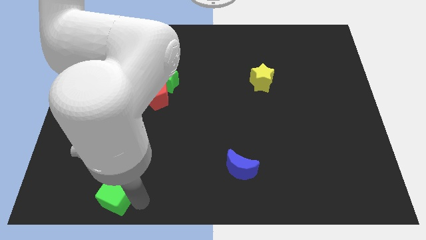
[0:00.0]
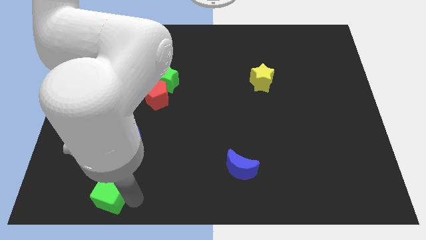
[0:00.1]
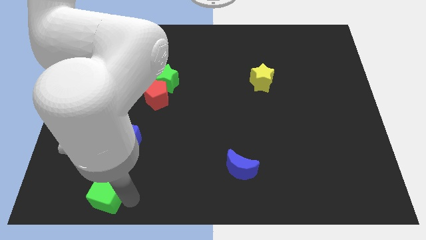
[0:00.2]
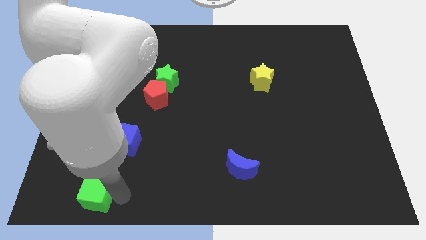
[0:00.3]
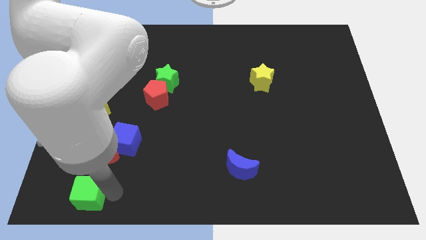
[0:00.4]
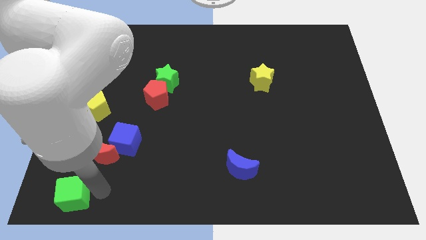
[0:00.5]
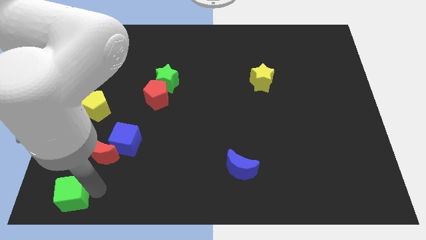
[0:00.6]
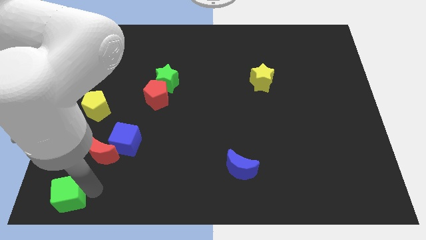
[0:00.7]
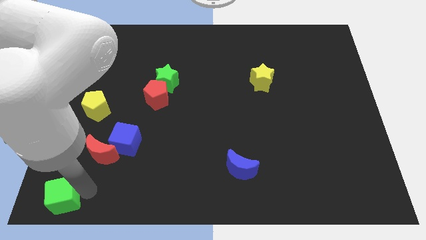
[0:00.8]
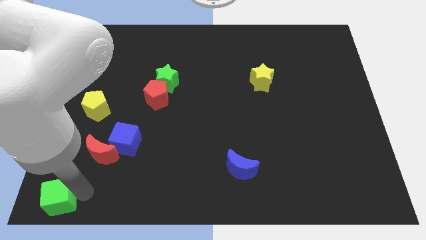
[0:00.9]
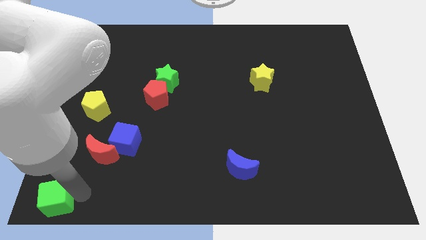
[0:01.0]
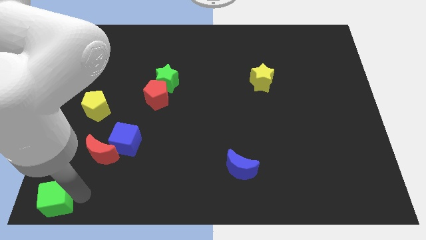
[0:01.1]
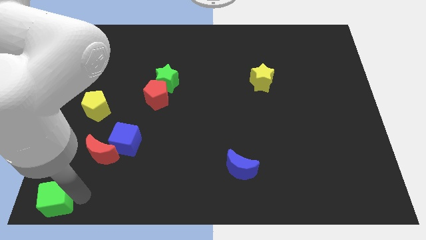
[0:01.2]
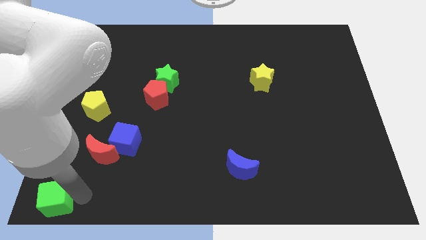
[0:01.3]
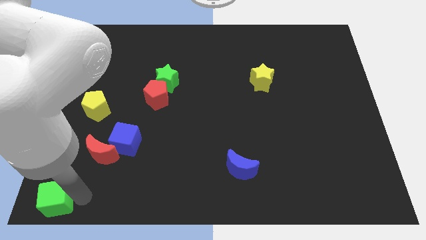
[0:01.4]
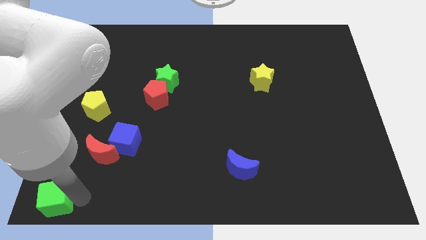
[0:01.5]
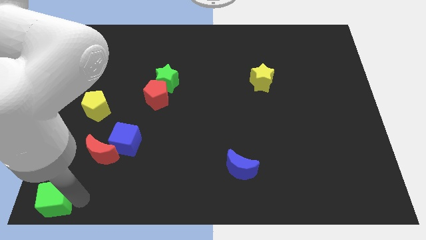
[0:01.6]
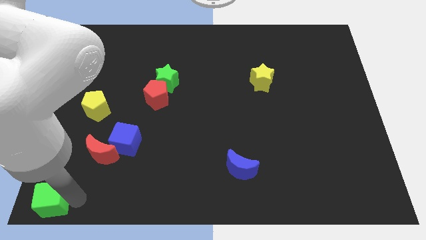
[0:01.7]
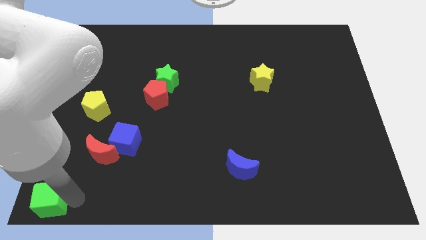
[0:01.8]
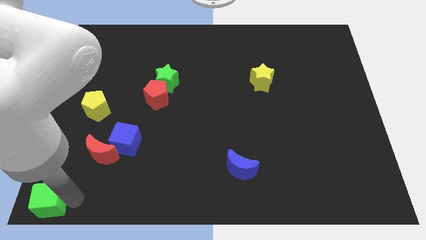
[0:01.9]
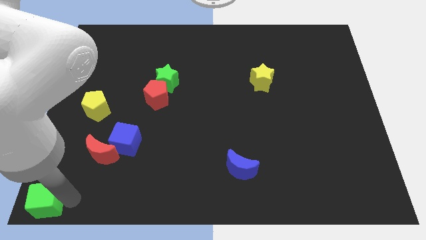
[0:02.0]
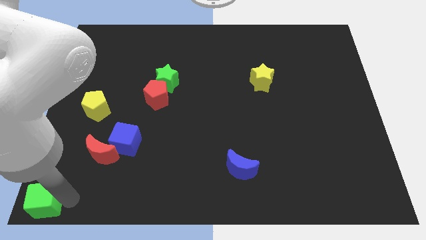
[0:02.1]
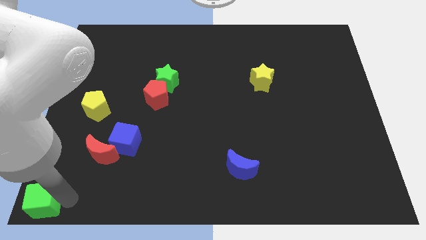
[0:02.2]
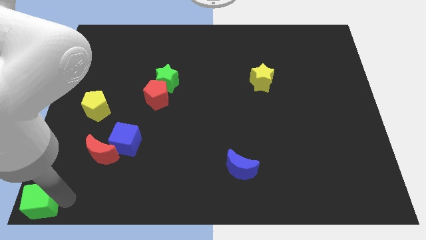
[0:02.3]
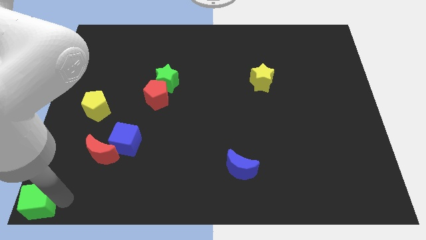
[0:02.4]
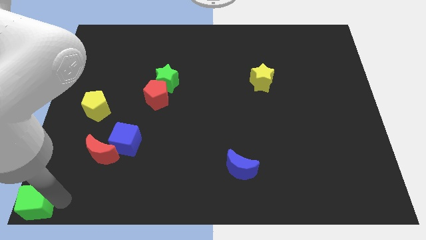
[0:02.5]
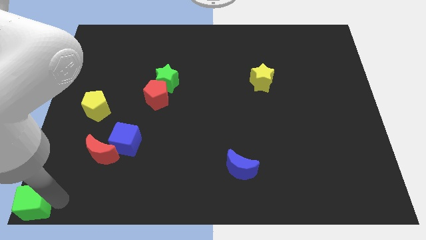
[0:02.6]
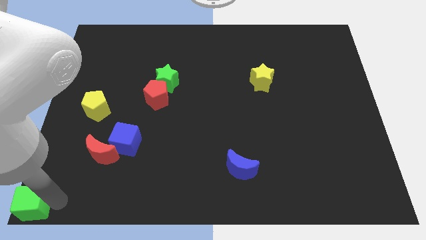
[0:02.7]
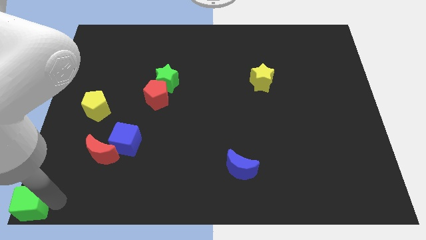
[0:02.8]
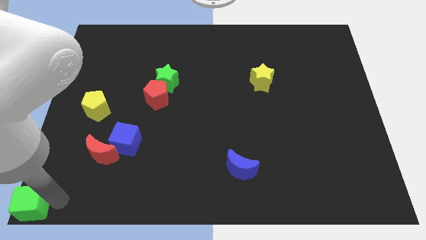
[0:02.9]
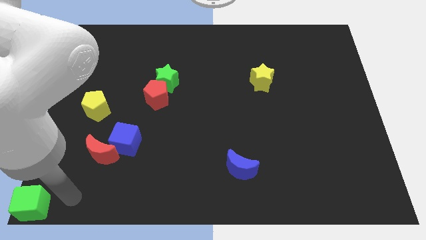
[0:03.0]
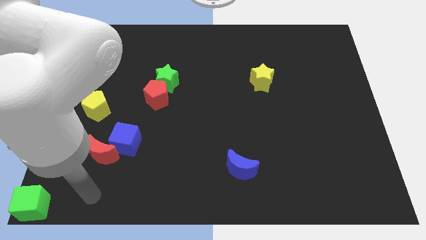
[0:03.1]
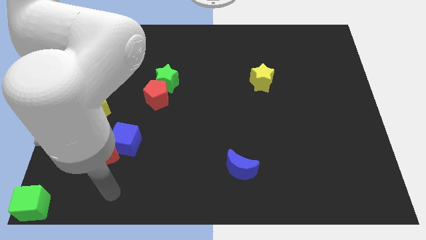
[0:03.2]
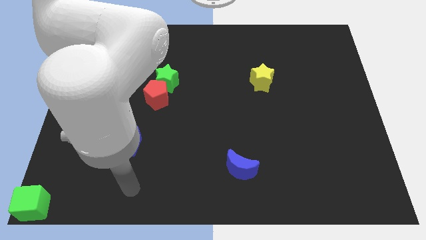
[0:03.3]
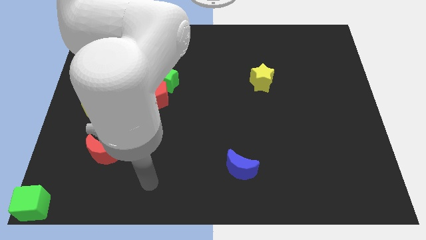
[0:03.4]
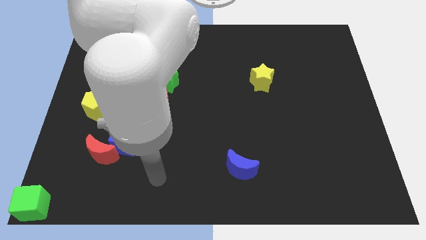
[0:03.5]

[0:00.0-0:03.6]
push the green cube to the bottom left

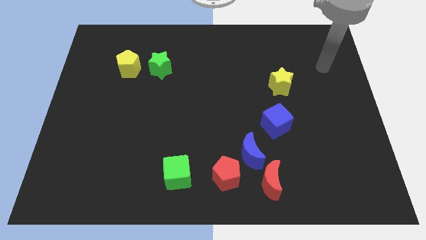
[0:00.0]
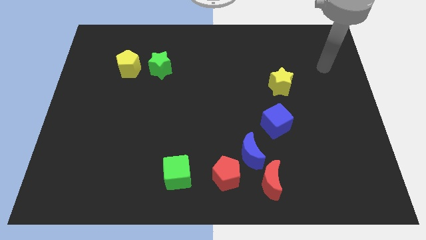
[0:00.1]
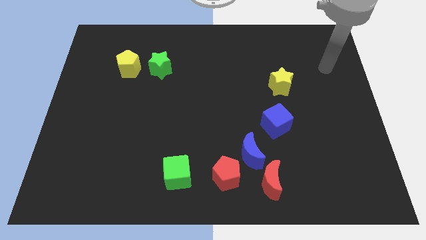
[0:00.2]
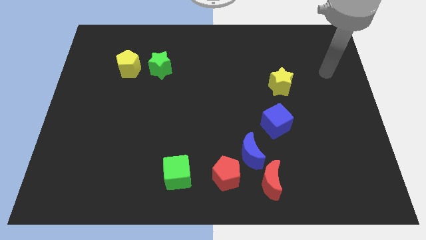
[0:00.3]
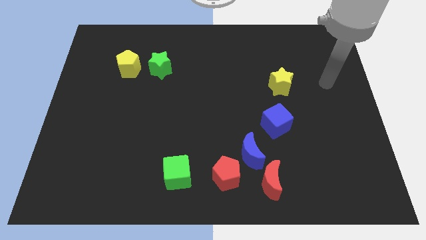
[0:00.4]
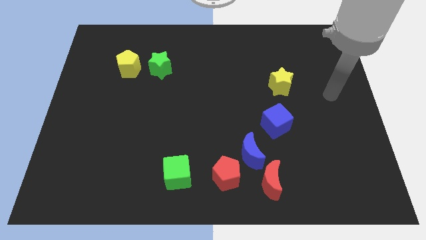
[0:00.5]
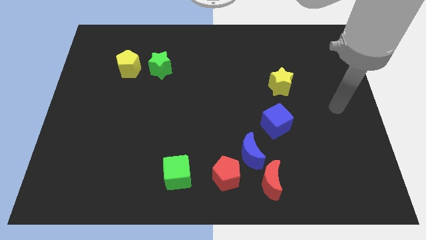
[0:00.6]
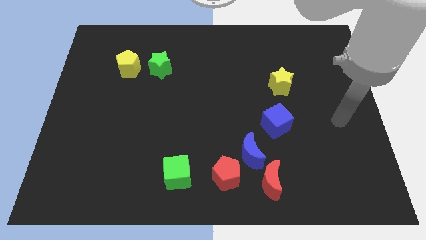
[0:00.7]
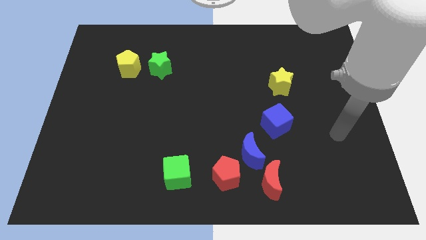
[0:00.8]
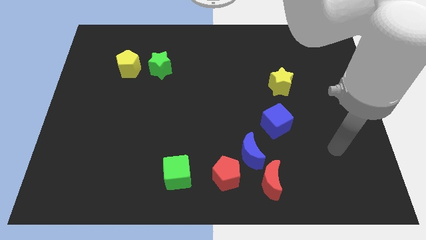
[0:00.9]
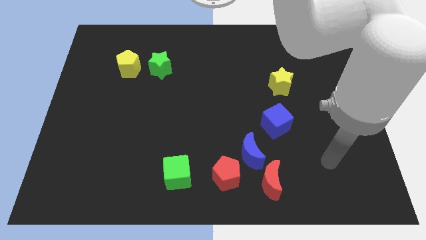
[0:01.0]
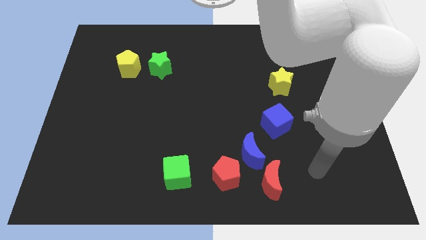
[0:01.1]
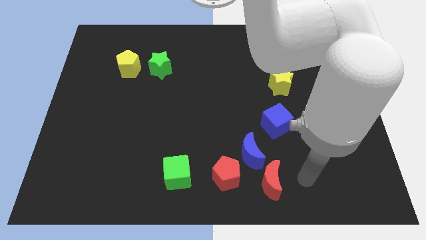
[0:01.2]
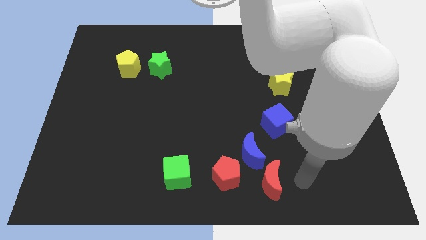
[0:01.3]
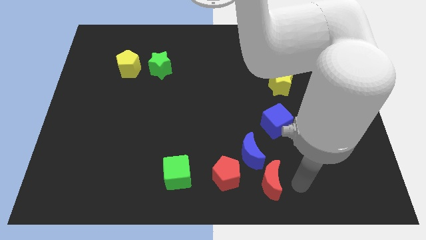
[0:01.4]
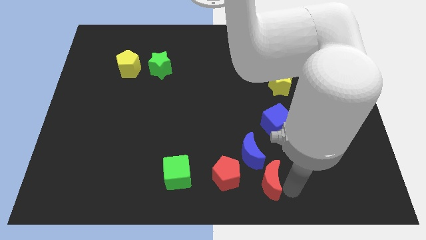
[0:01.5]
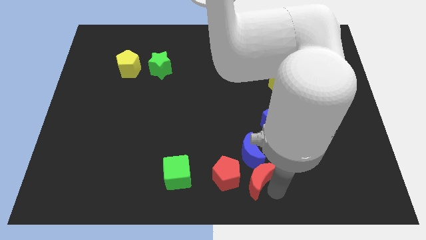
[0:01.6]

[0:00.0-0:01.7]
move the red crescent into the red penatgon

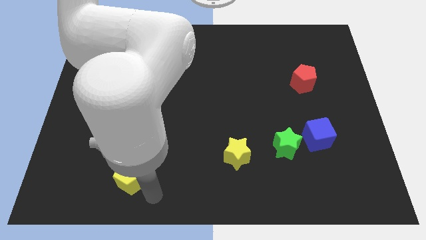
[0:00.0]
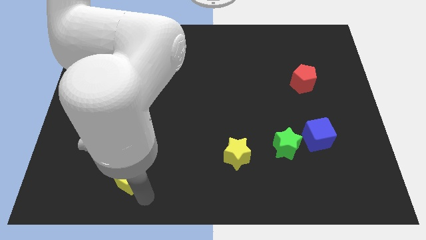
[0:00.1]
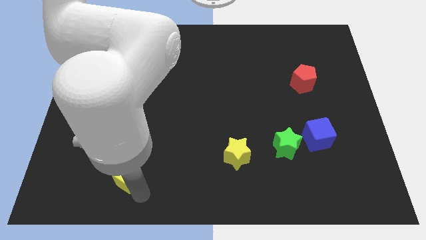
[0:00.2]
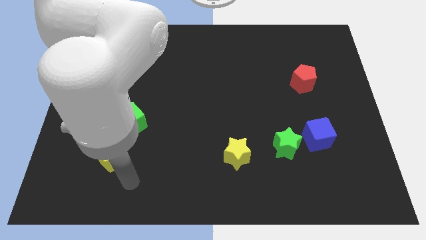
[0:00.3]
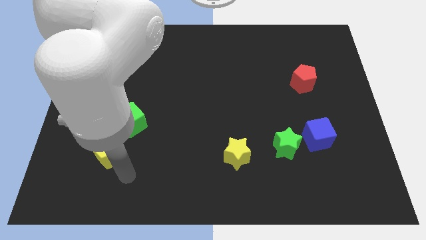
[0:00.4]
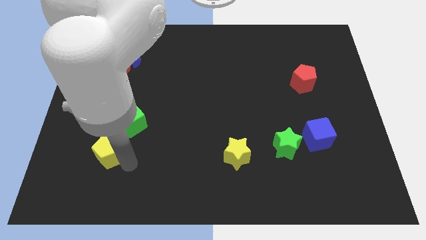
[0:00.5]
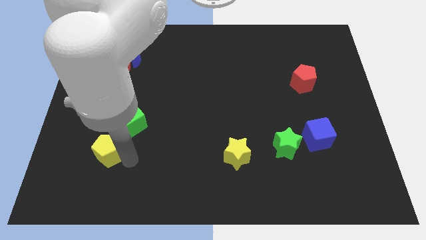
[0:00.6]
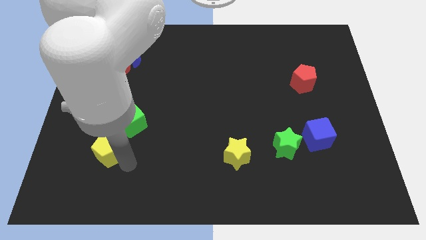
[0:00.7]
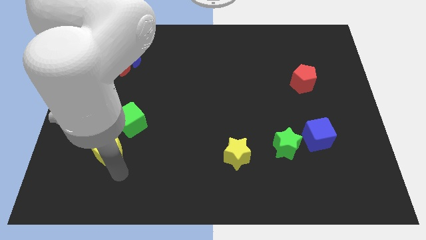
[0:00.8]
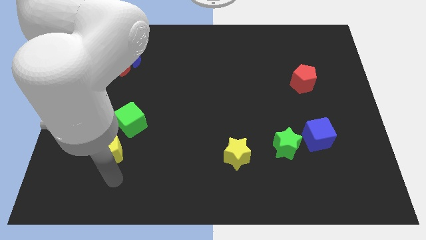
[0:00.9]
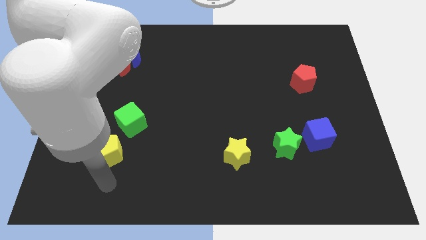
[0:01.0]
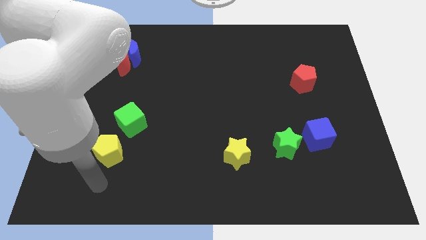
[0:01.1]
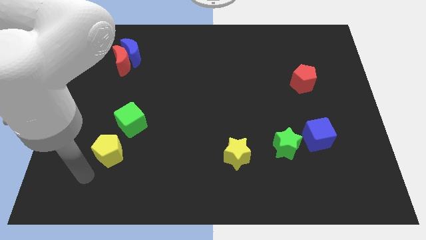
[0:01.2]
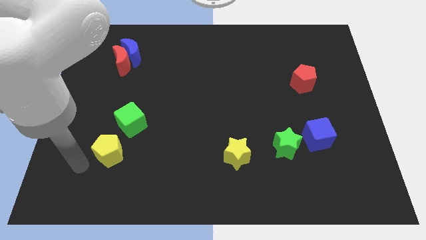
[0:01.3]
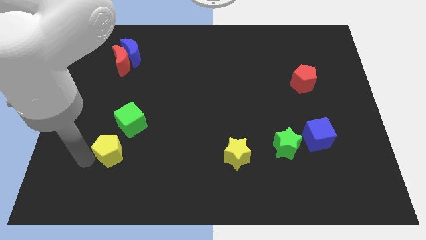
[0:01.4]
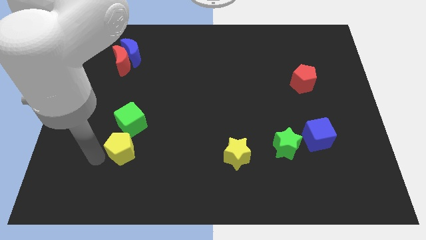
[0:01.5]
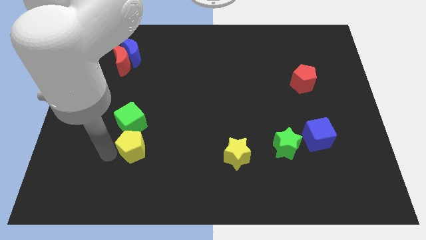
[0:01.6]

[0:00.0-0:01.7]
put the yellow pentagon to the bottom side of the green cube

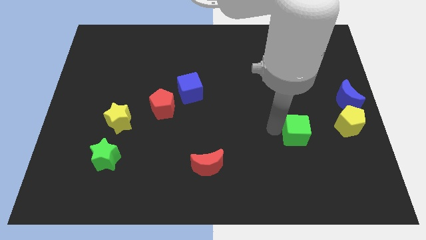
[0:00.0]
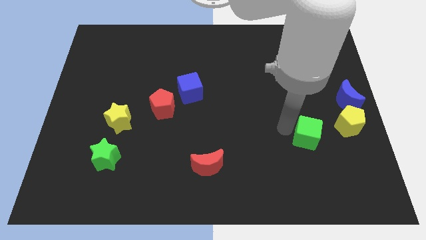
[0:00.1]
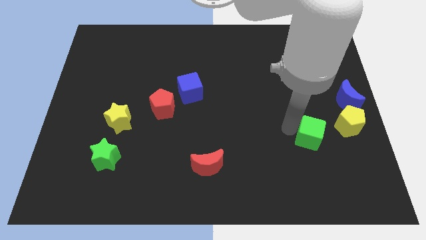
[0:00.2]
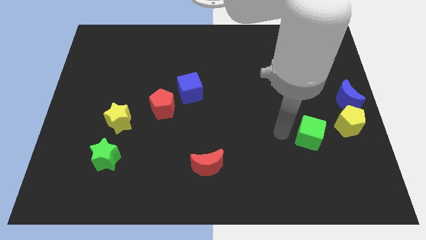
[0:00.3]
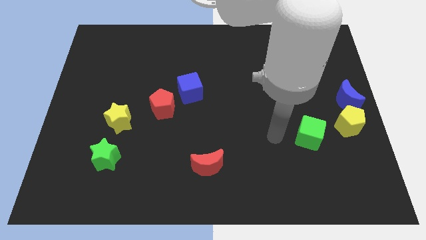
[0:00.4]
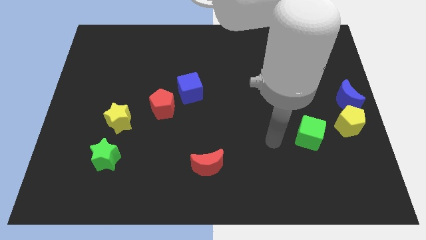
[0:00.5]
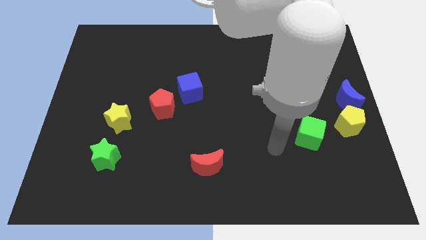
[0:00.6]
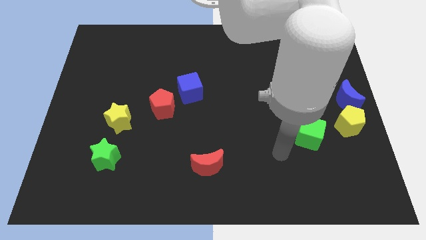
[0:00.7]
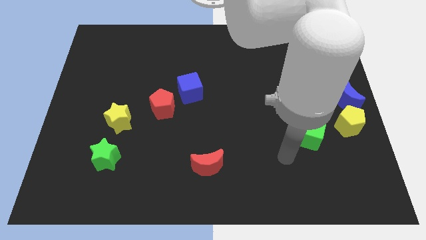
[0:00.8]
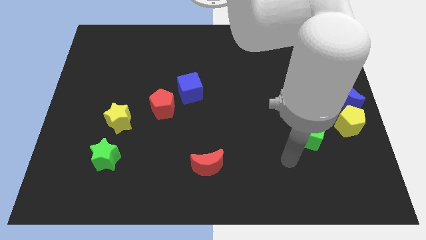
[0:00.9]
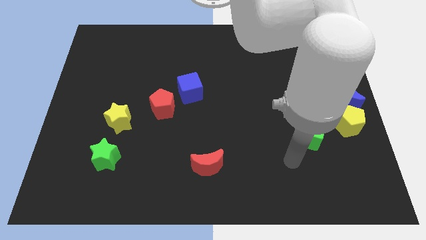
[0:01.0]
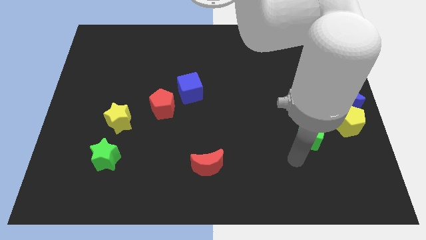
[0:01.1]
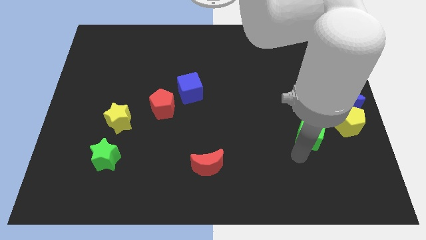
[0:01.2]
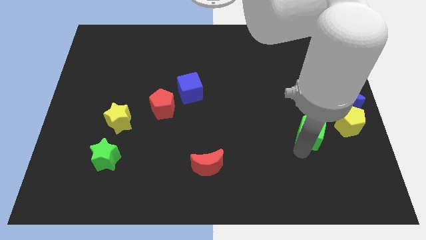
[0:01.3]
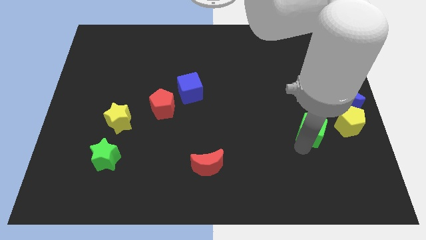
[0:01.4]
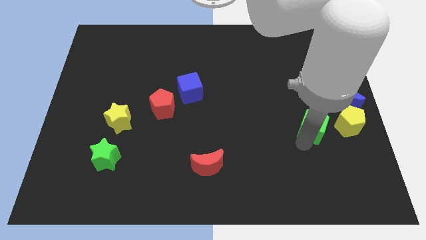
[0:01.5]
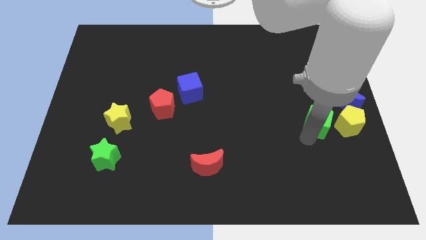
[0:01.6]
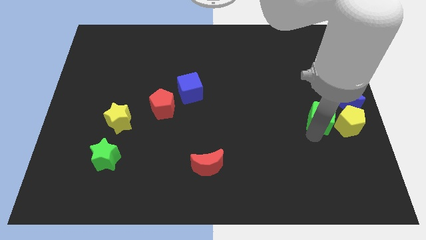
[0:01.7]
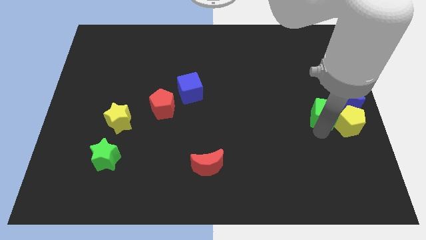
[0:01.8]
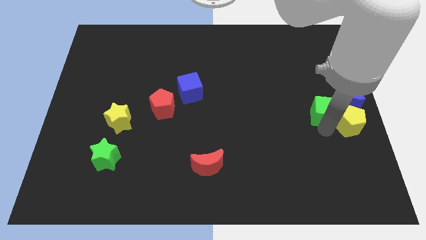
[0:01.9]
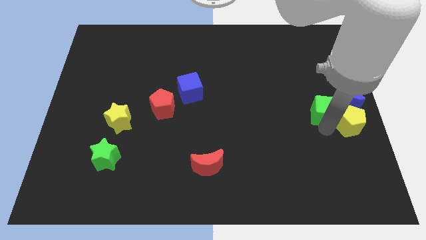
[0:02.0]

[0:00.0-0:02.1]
push the green cube towards the blue crescent

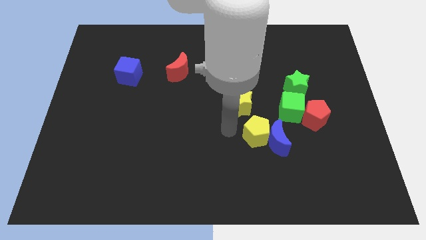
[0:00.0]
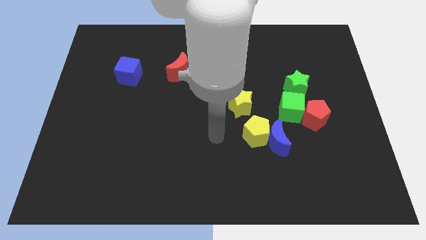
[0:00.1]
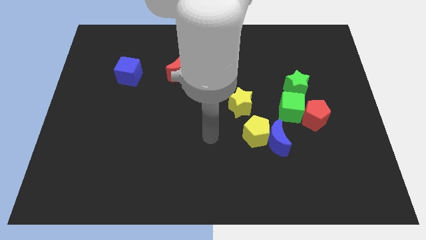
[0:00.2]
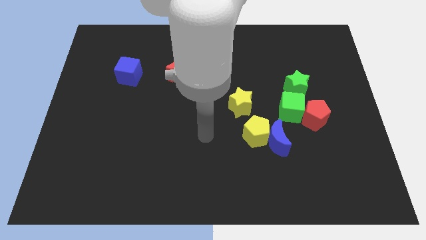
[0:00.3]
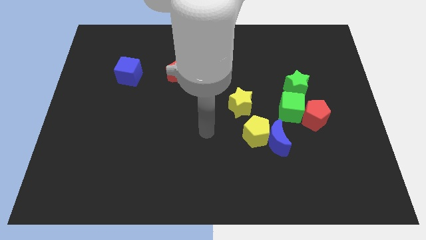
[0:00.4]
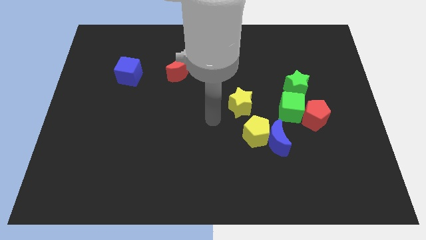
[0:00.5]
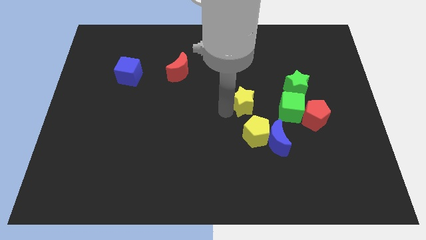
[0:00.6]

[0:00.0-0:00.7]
place the arm left to the yellow star
